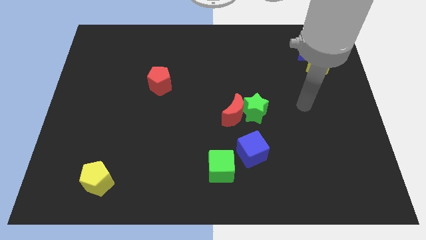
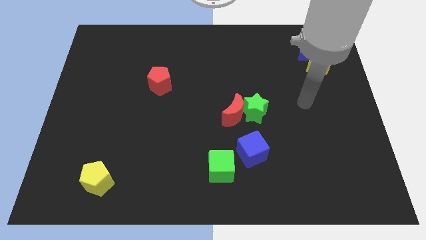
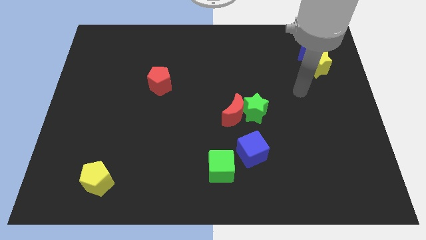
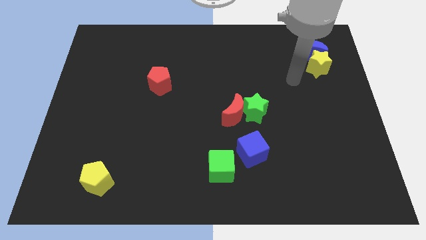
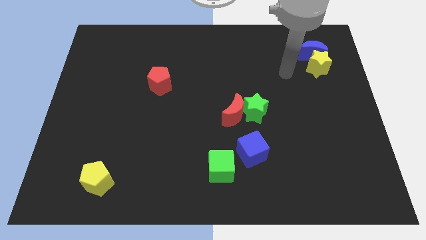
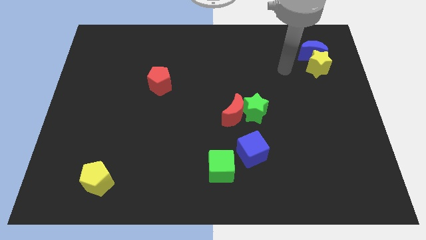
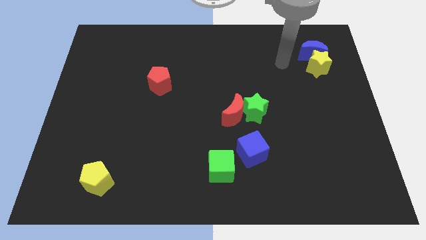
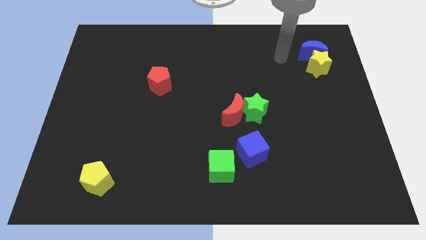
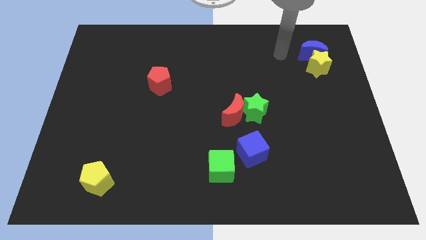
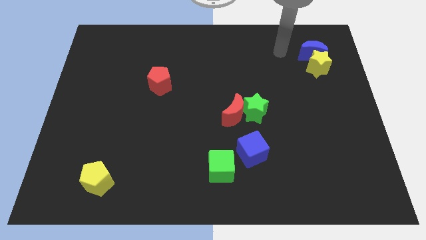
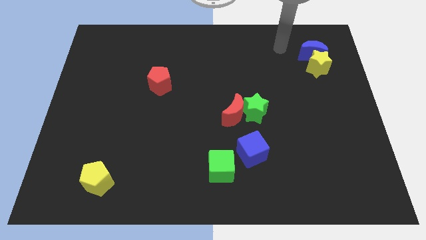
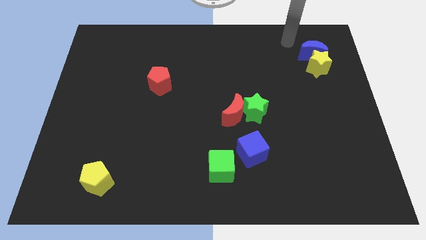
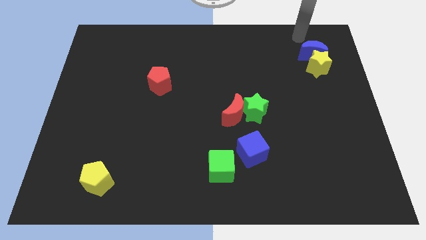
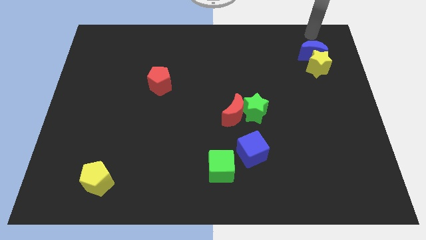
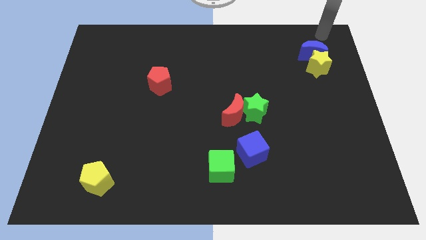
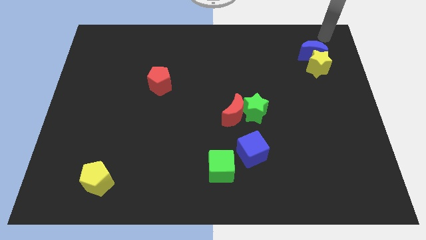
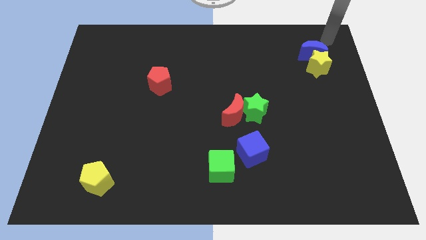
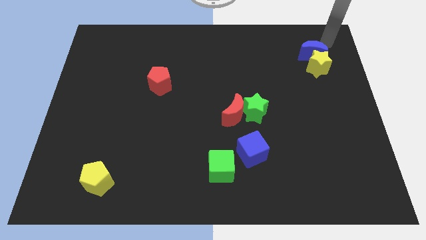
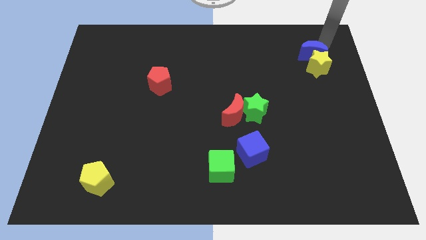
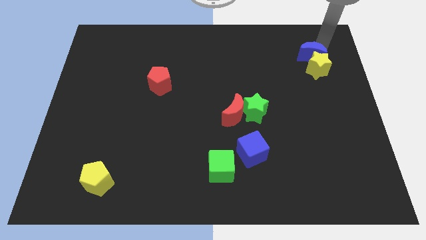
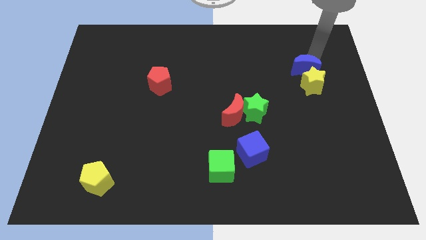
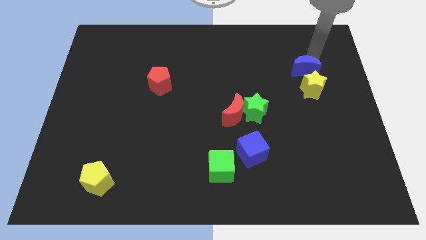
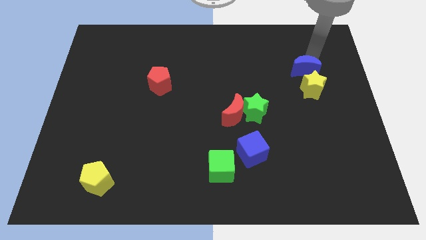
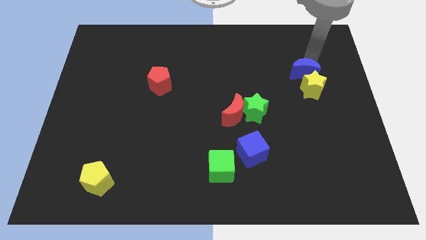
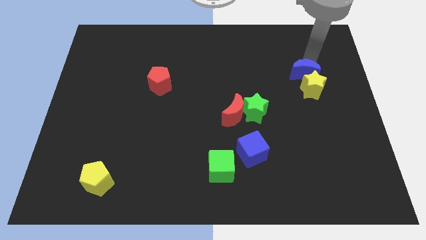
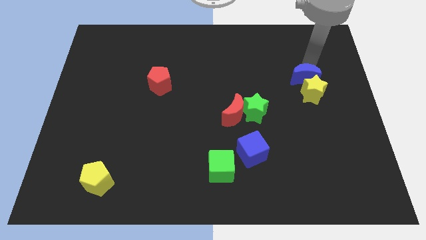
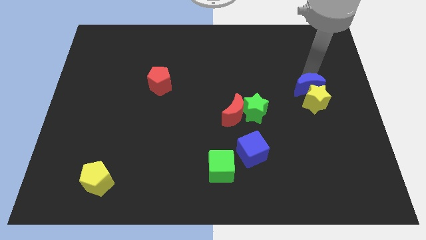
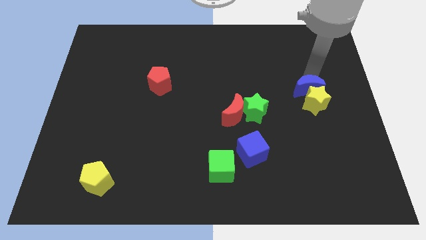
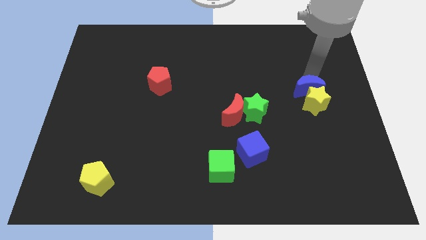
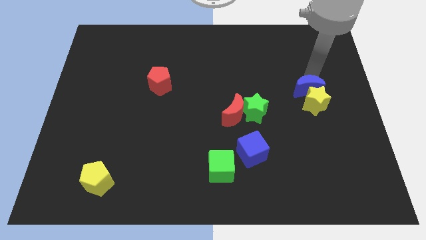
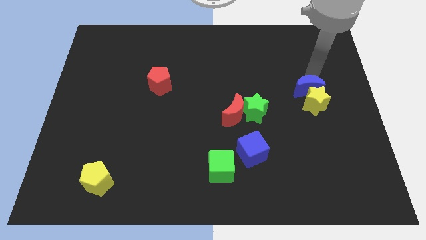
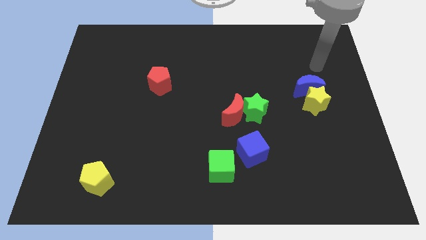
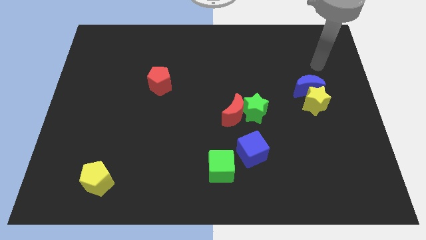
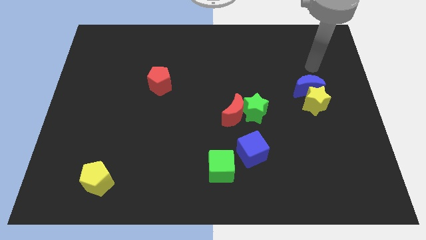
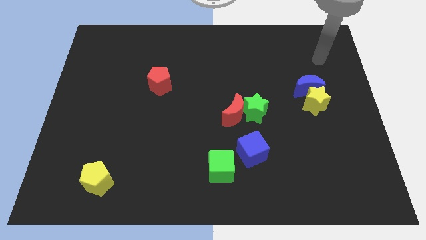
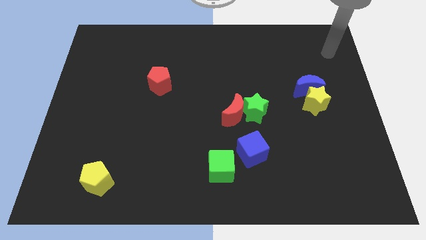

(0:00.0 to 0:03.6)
move the blue crescent slightly towards down

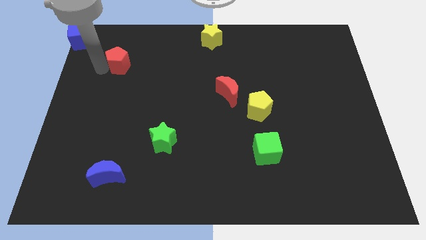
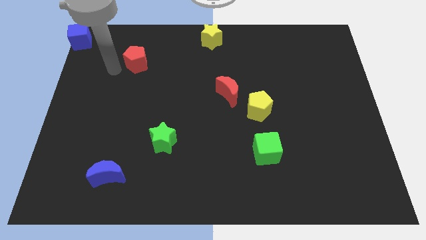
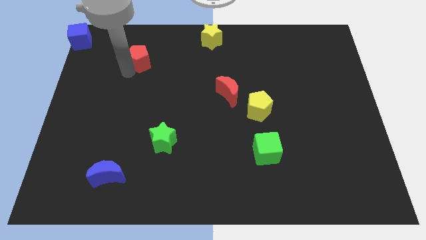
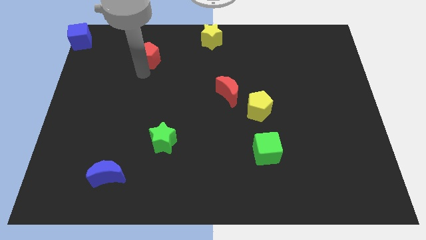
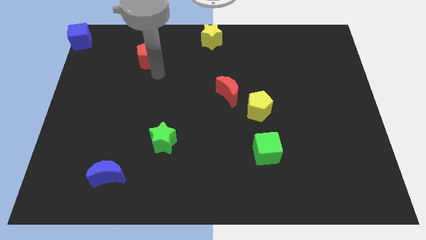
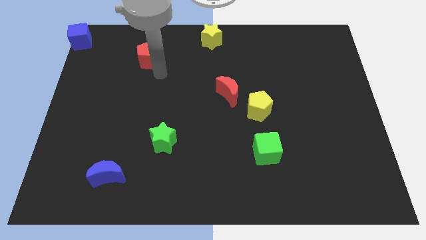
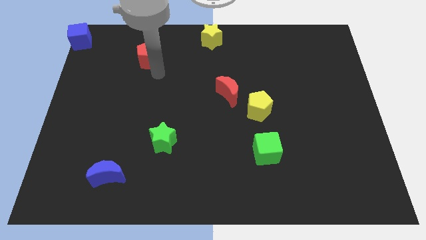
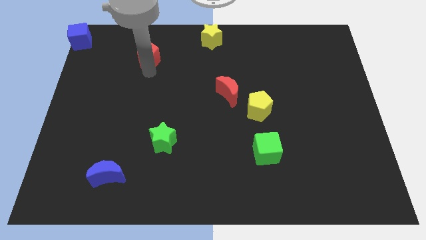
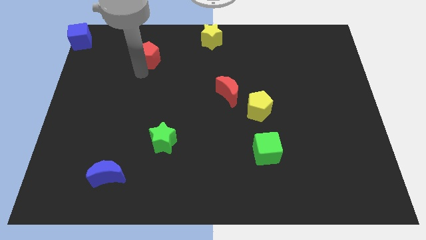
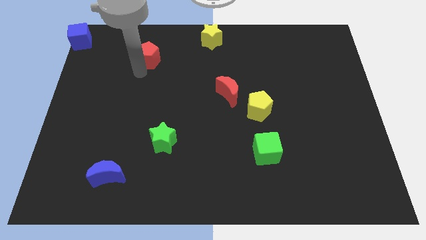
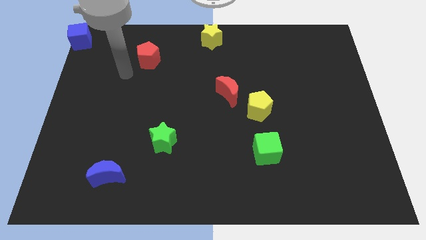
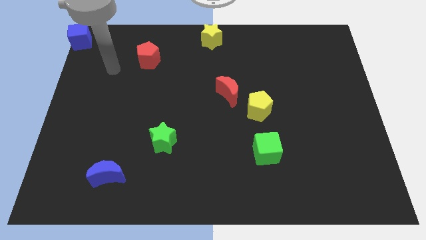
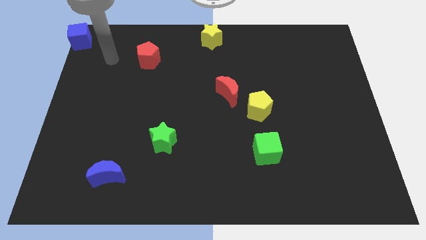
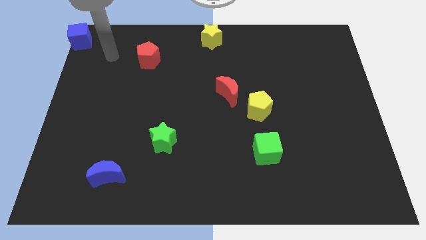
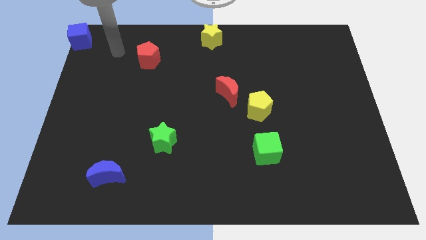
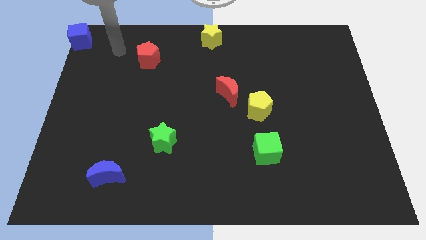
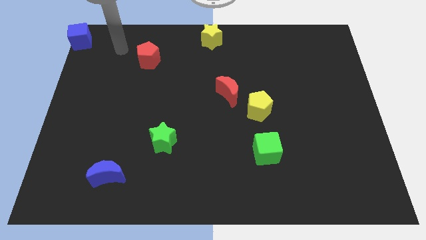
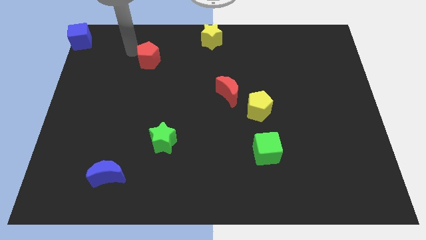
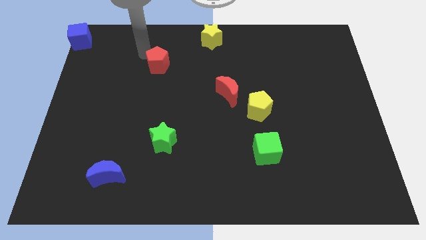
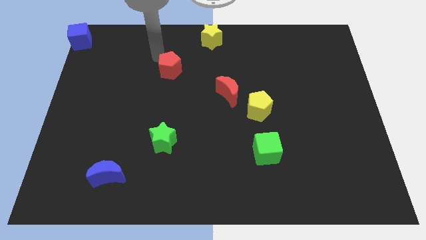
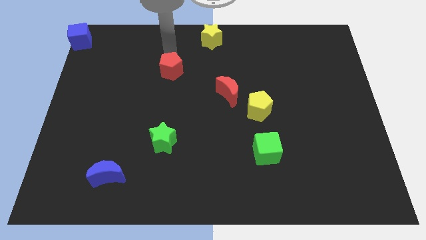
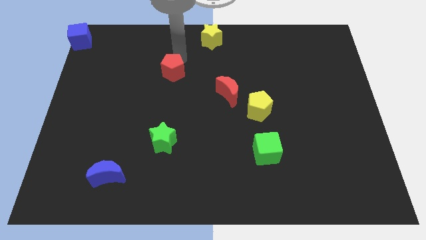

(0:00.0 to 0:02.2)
place the red pentagon above the green star

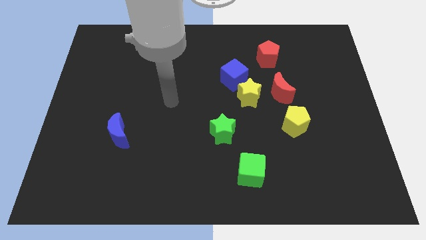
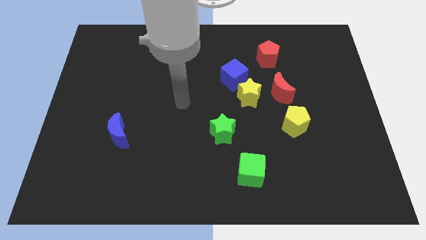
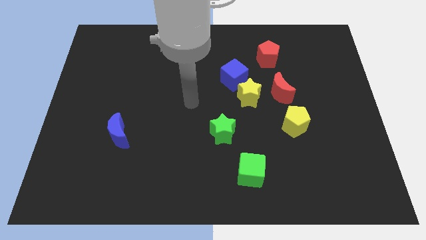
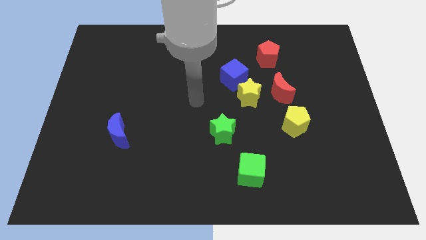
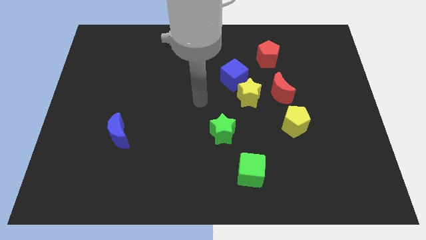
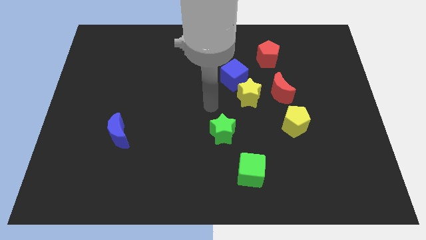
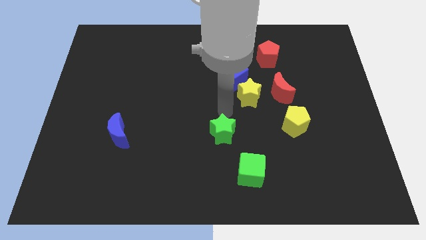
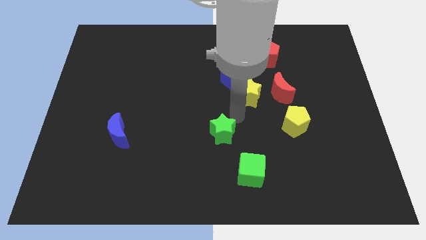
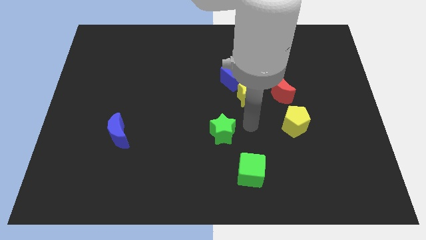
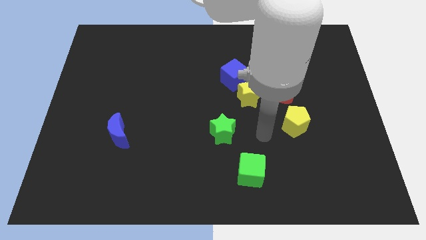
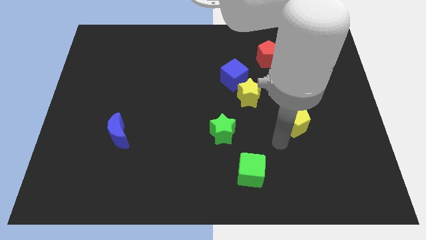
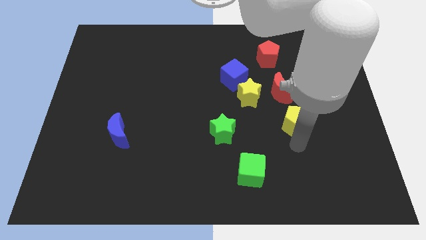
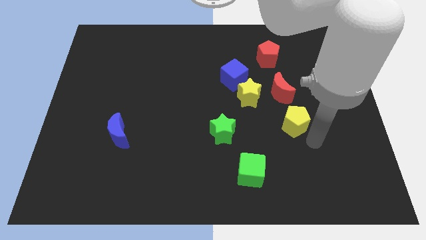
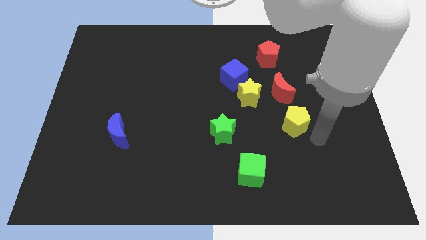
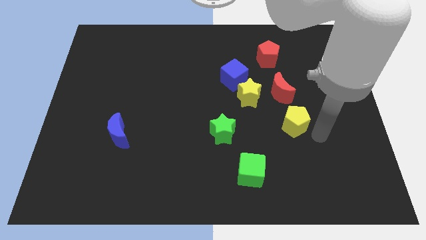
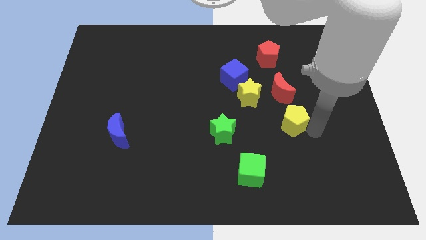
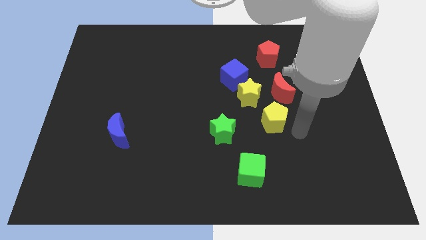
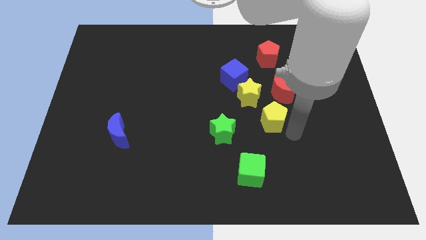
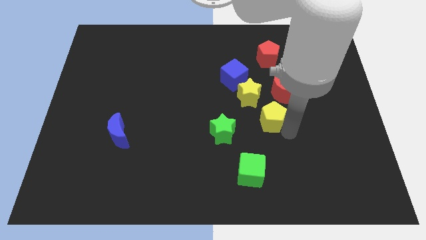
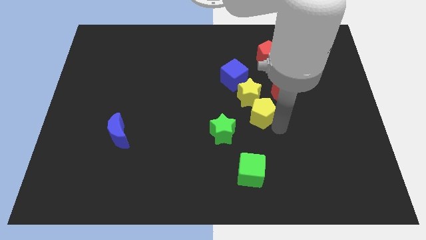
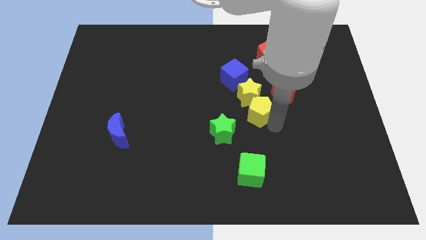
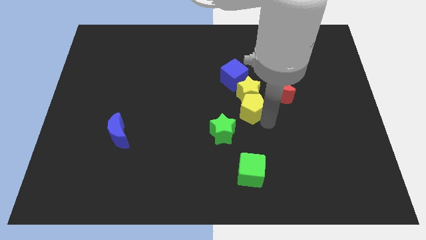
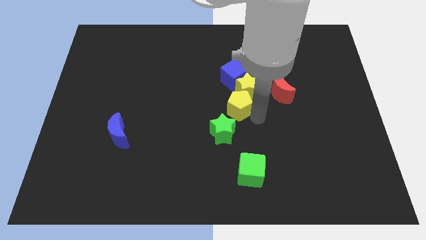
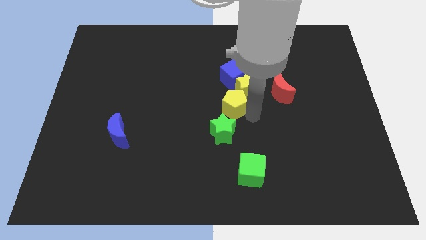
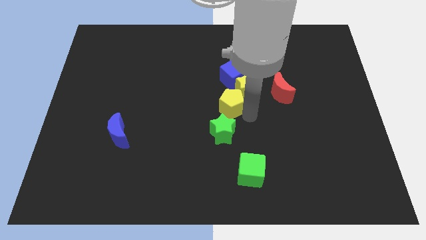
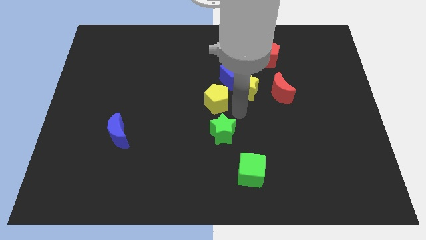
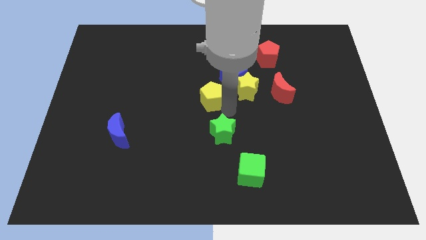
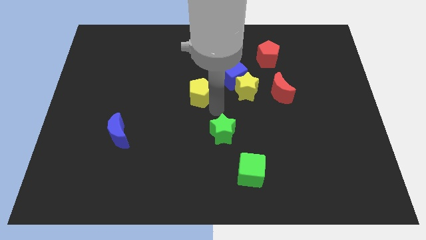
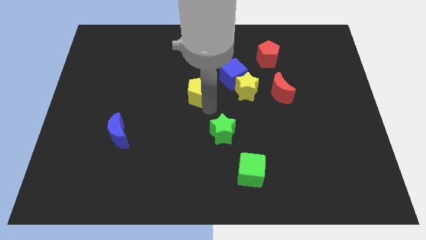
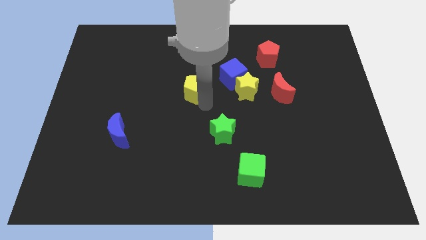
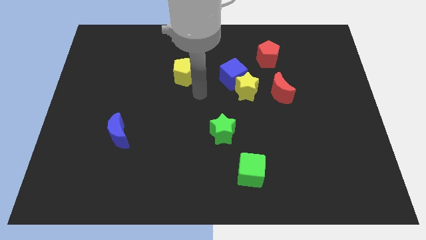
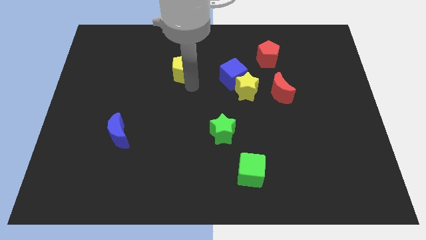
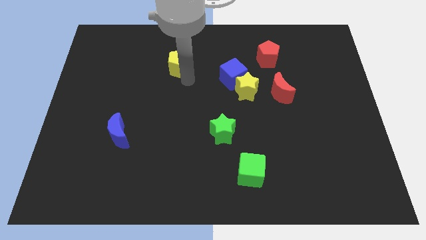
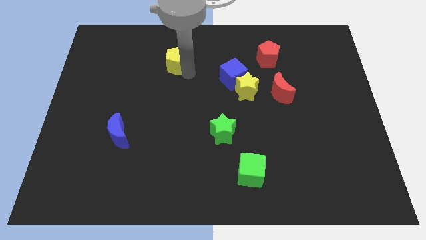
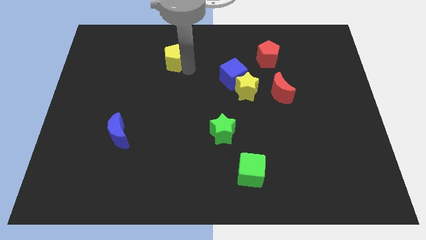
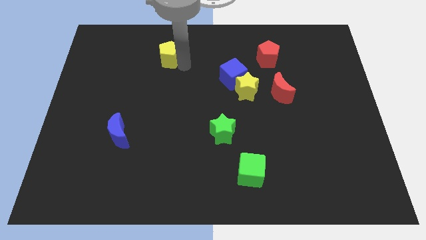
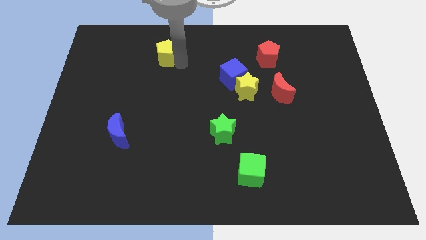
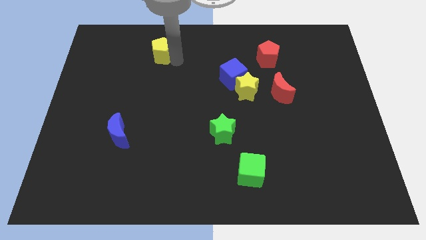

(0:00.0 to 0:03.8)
push the yellow pentagon towards the top
